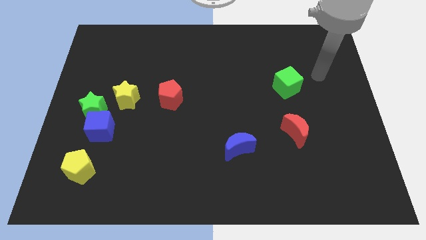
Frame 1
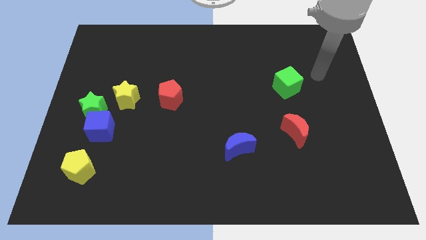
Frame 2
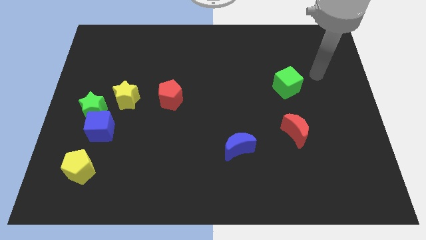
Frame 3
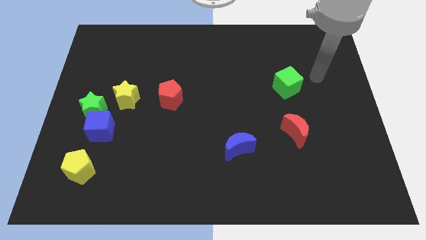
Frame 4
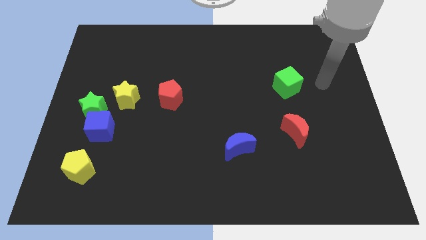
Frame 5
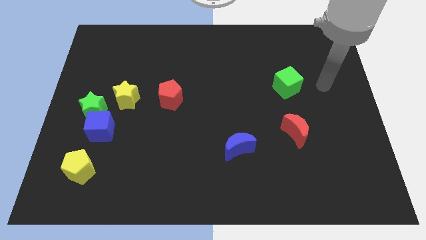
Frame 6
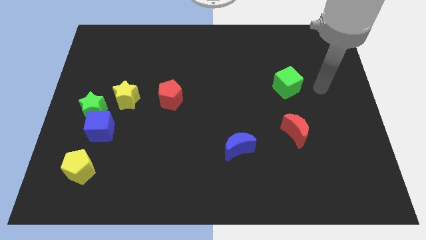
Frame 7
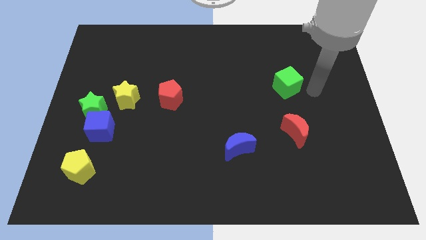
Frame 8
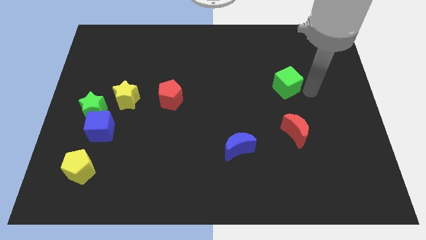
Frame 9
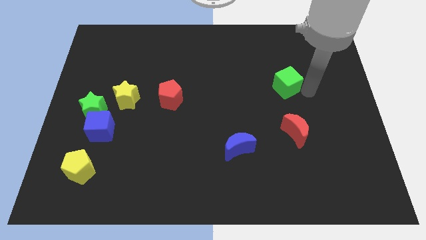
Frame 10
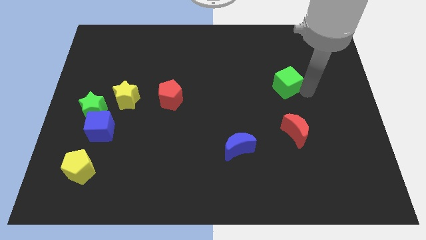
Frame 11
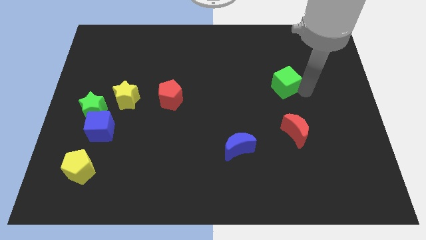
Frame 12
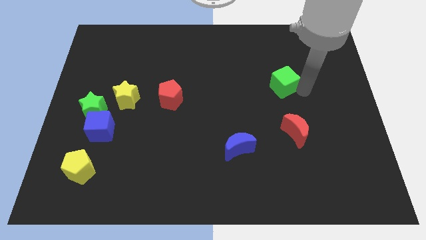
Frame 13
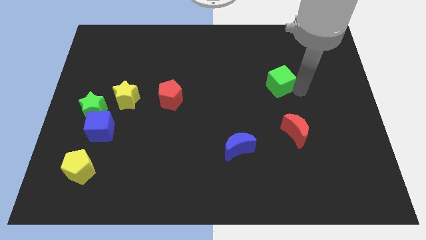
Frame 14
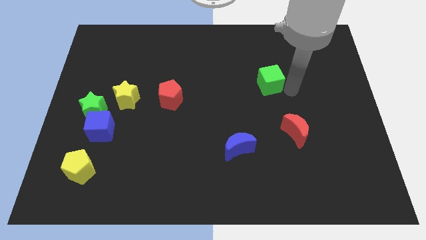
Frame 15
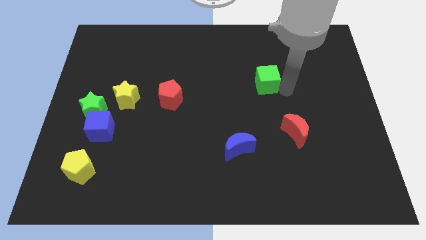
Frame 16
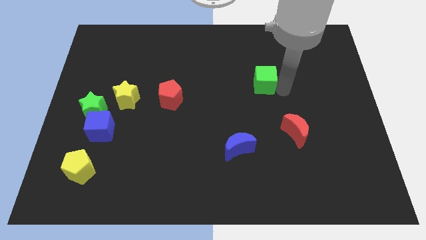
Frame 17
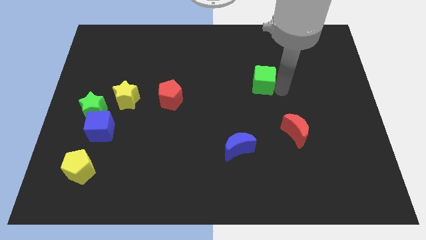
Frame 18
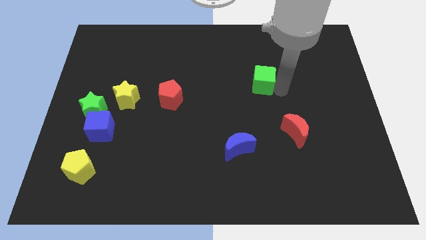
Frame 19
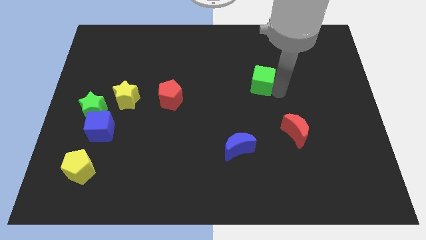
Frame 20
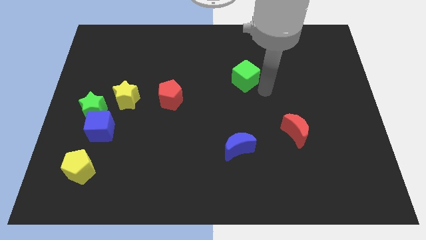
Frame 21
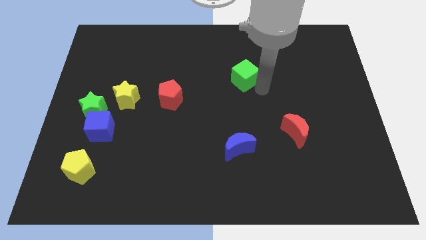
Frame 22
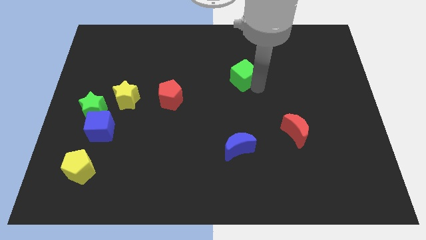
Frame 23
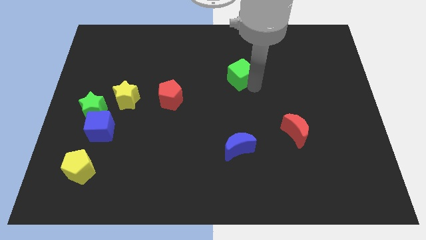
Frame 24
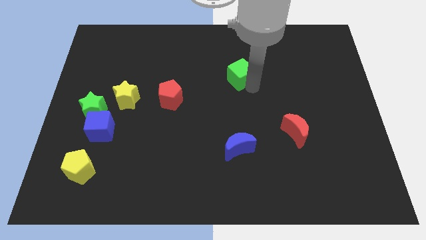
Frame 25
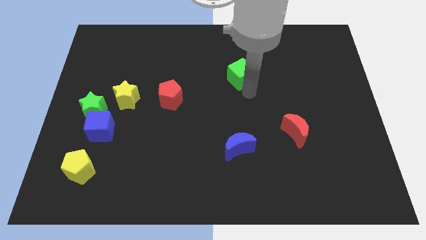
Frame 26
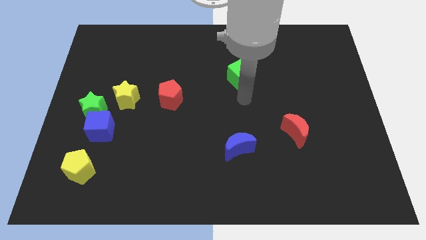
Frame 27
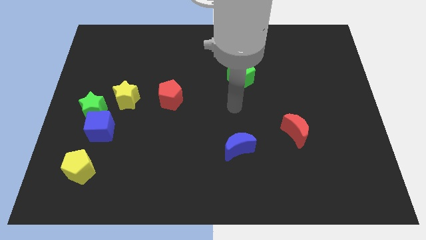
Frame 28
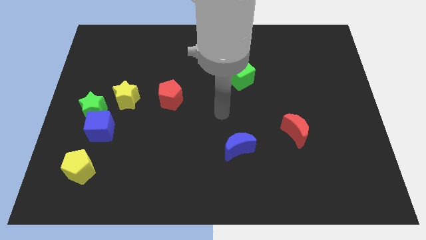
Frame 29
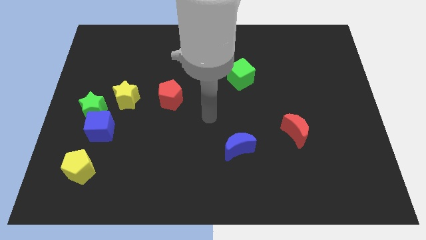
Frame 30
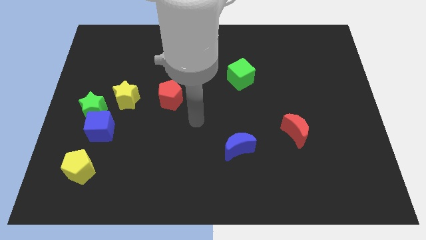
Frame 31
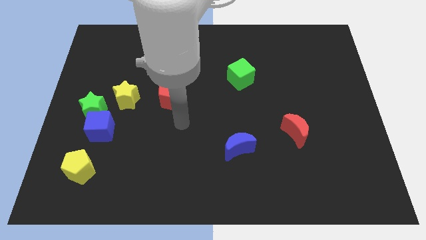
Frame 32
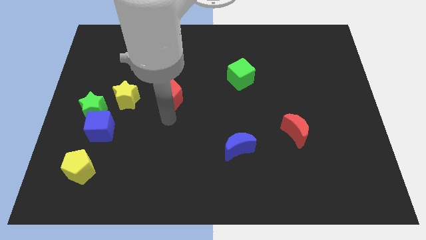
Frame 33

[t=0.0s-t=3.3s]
move the green cube towards the left

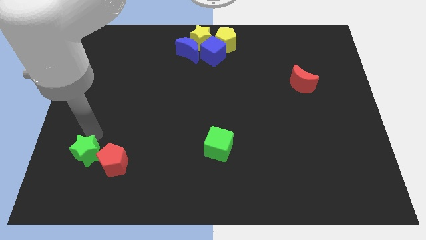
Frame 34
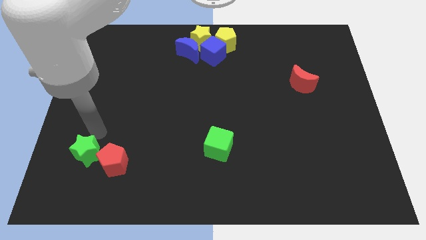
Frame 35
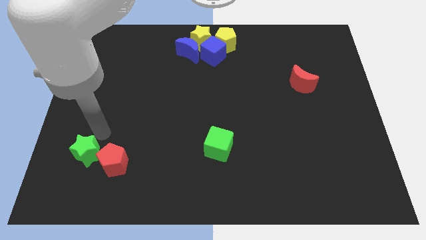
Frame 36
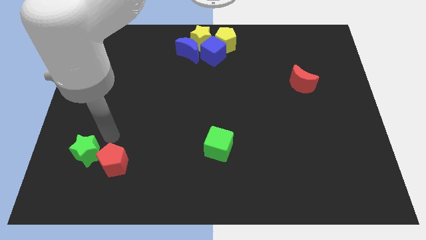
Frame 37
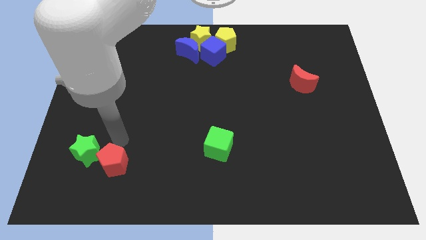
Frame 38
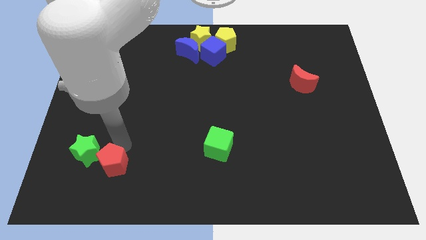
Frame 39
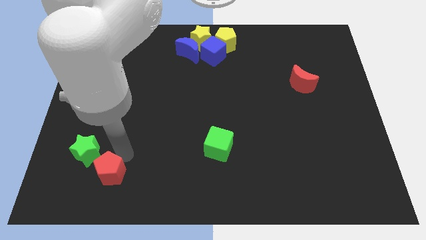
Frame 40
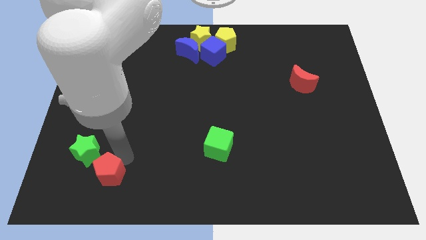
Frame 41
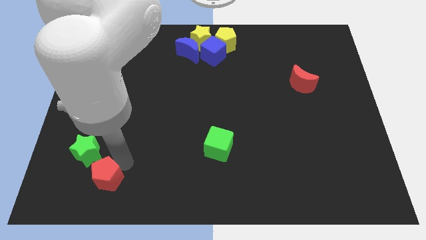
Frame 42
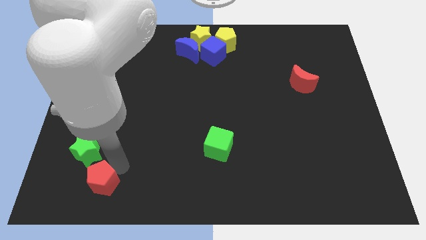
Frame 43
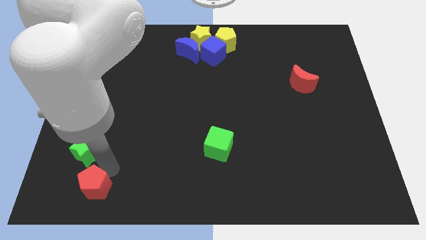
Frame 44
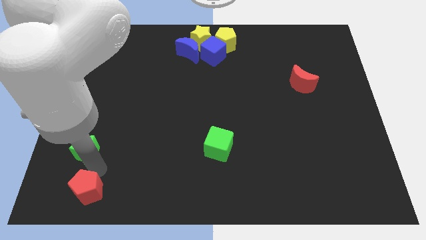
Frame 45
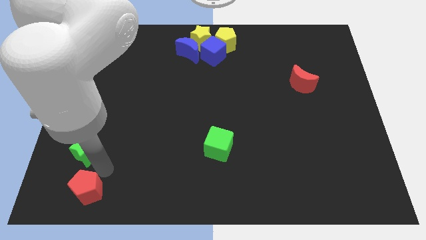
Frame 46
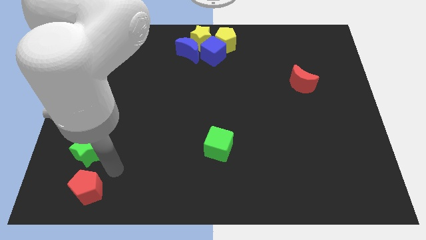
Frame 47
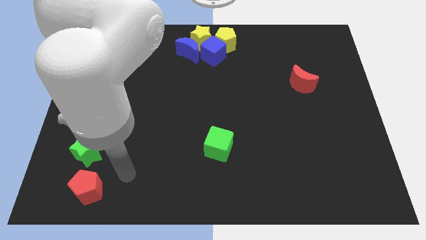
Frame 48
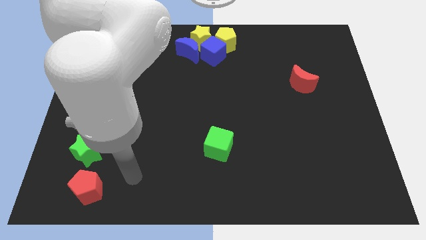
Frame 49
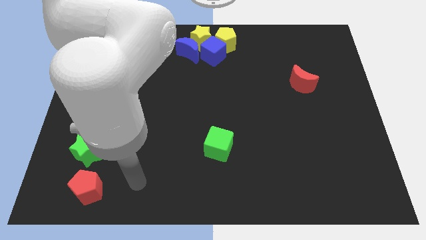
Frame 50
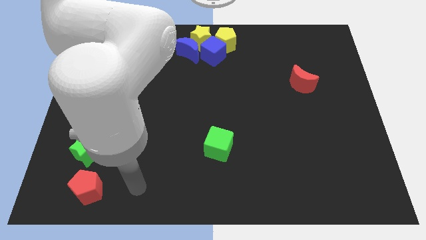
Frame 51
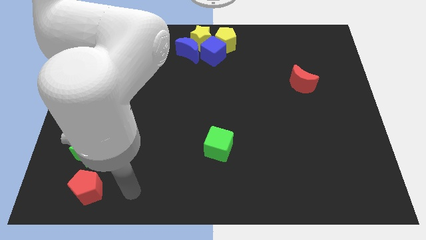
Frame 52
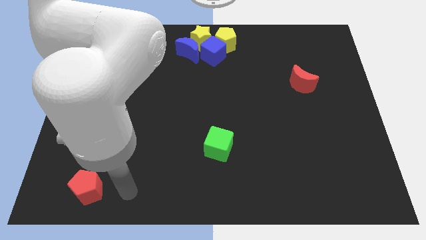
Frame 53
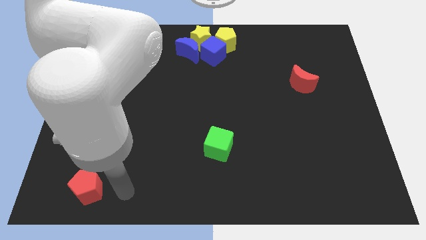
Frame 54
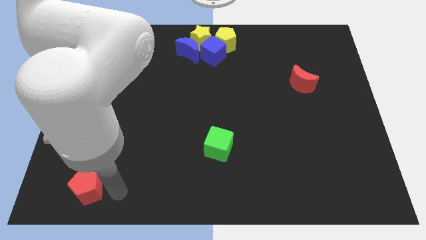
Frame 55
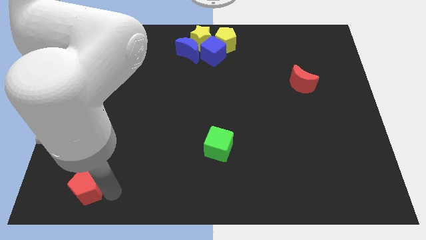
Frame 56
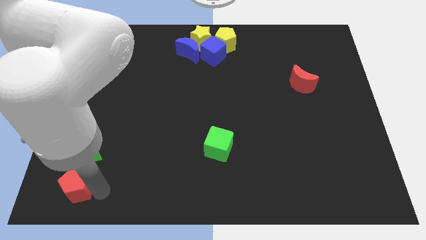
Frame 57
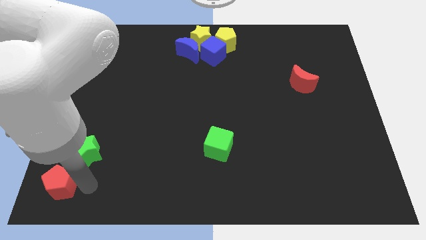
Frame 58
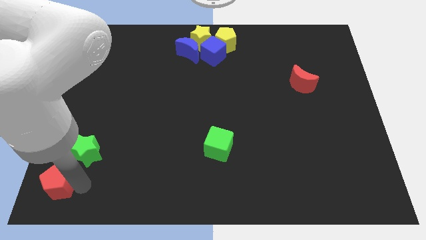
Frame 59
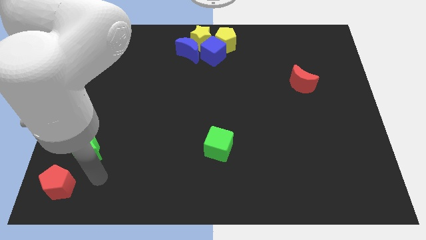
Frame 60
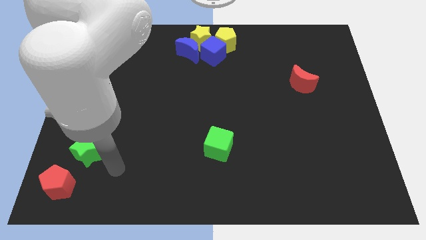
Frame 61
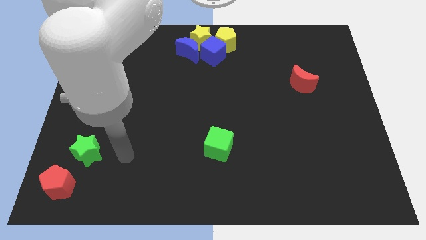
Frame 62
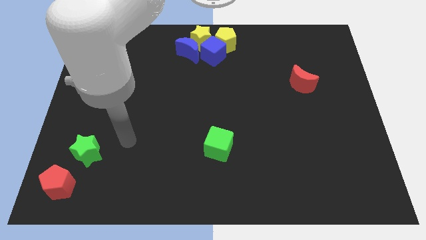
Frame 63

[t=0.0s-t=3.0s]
push the red pentagon to the bottom left of the board

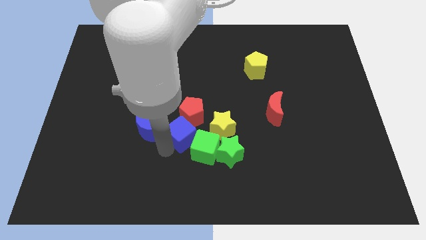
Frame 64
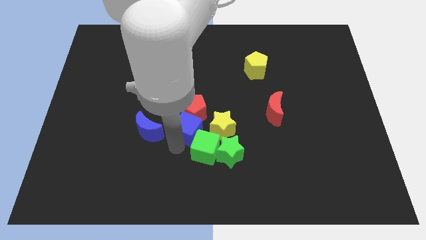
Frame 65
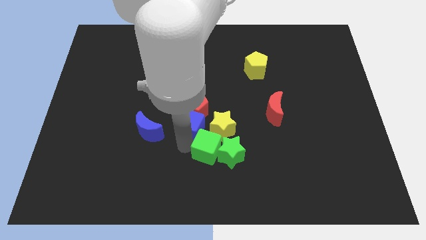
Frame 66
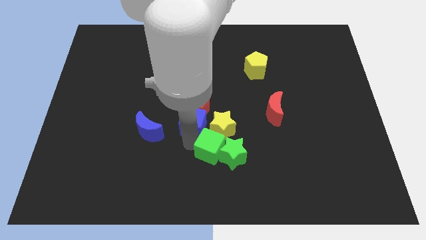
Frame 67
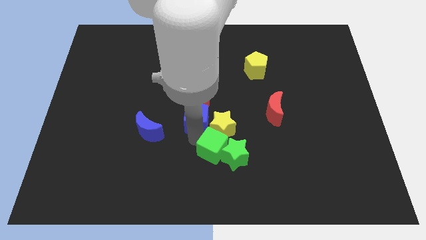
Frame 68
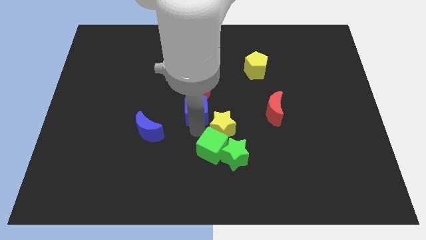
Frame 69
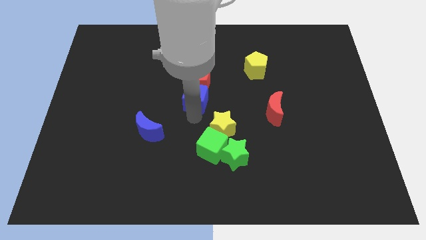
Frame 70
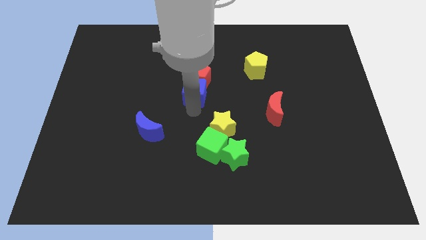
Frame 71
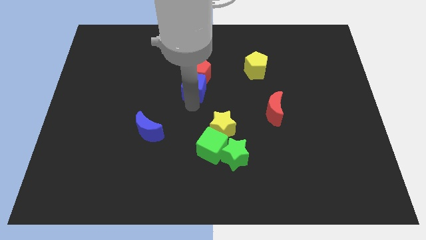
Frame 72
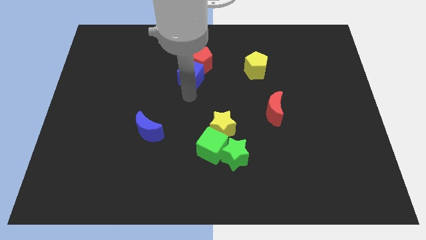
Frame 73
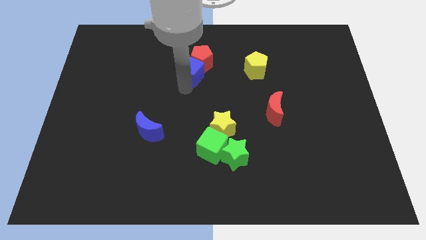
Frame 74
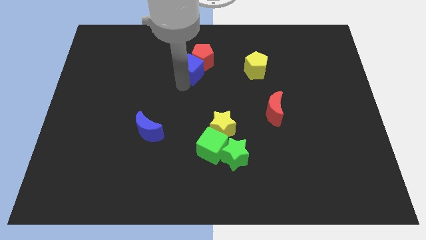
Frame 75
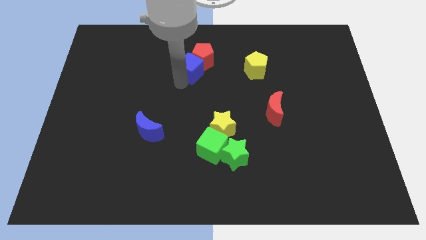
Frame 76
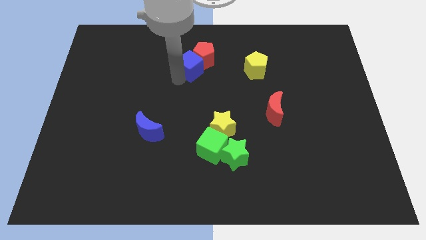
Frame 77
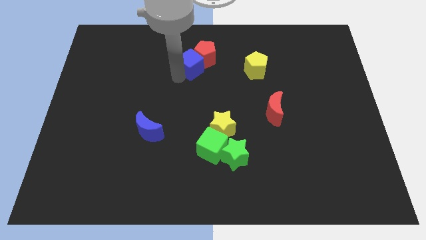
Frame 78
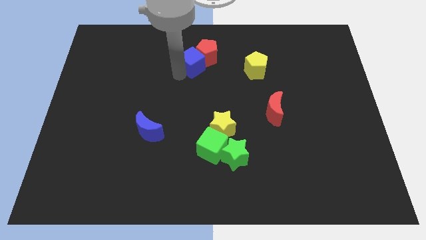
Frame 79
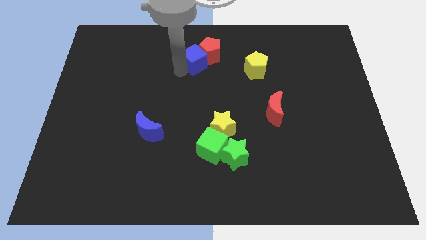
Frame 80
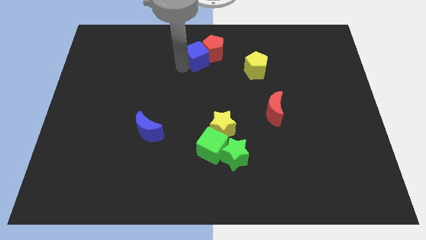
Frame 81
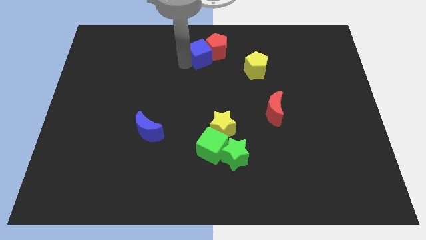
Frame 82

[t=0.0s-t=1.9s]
move the blue crescent towards the red pentagon

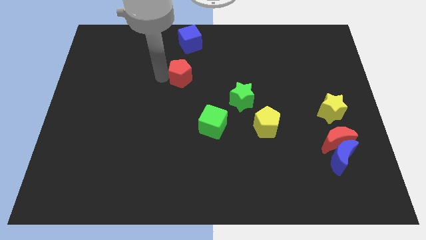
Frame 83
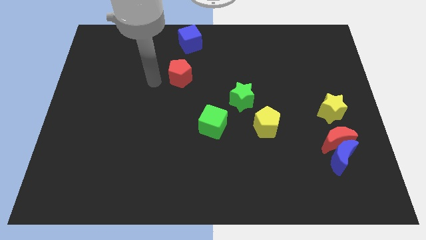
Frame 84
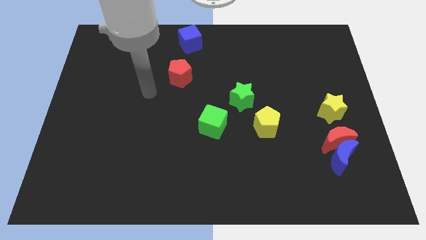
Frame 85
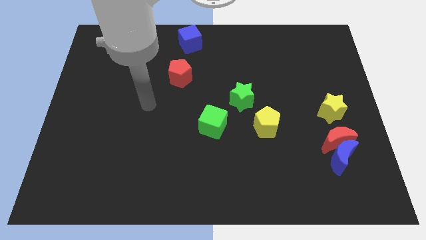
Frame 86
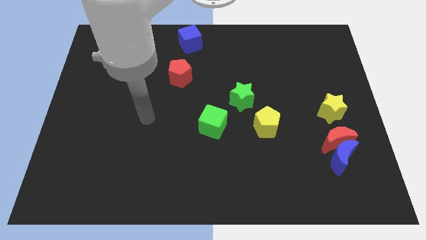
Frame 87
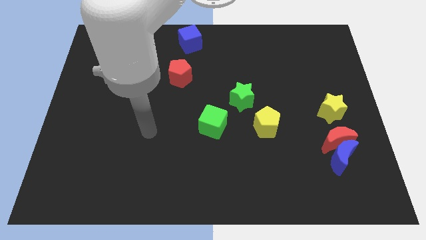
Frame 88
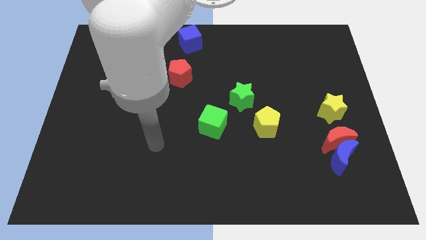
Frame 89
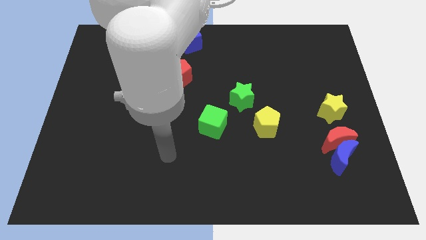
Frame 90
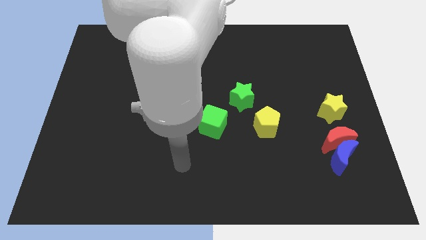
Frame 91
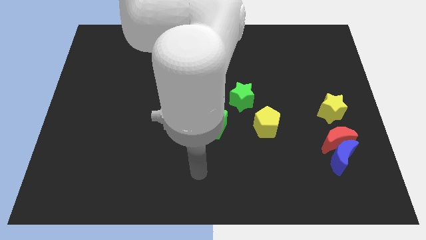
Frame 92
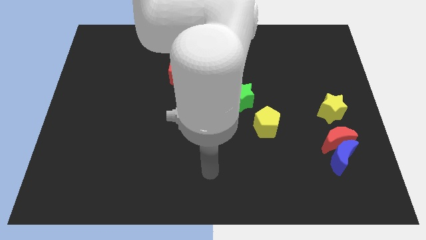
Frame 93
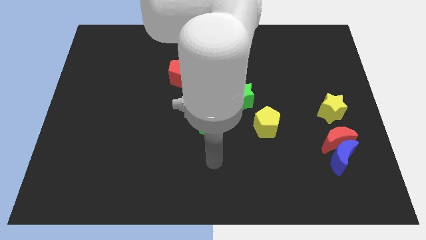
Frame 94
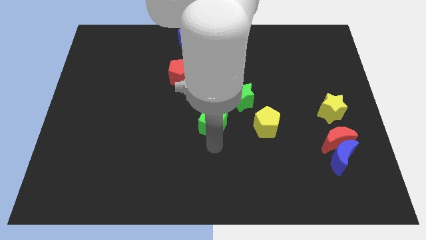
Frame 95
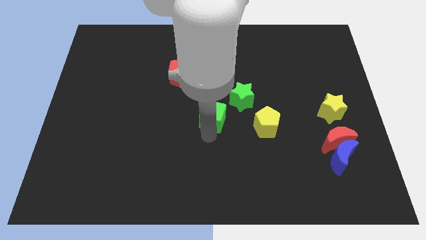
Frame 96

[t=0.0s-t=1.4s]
move your arm to the bottom of the green cube
